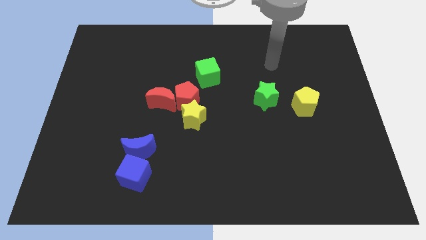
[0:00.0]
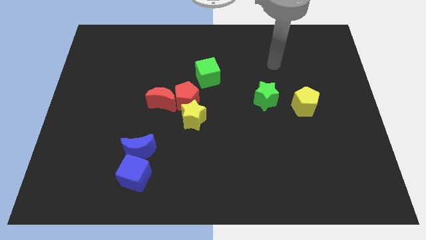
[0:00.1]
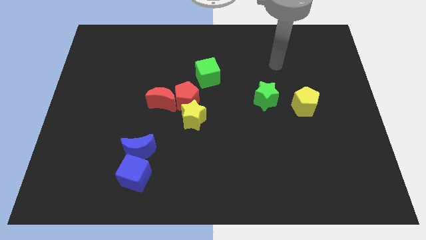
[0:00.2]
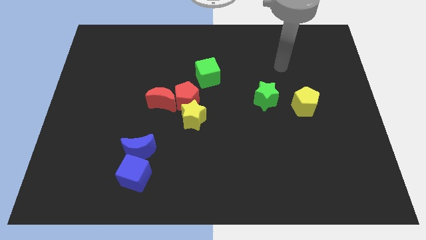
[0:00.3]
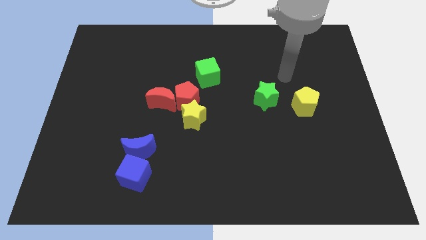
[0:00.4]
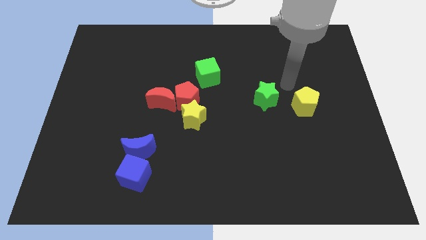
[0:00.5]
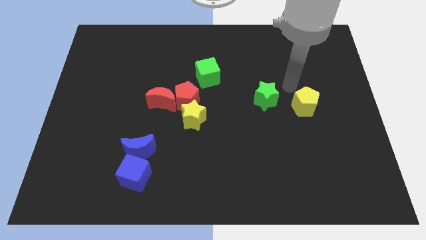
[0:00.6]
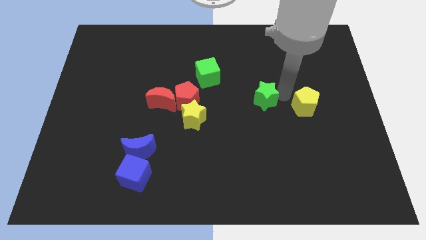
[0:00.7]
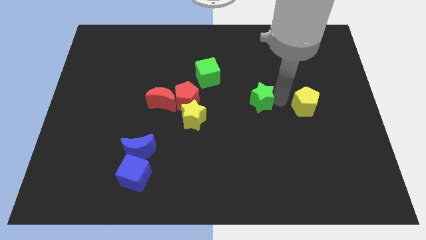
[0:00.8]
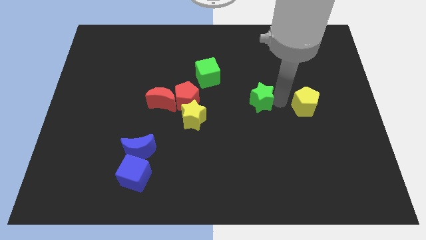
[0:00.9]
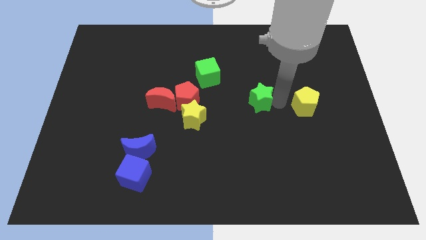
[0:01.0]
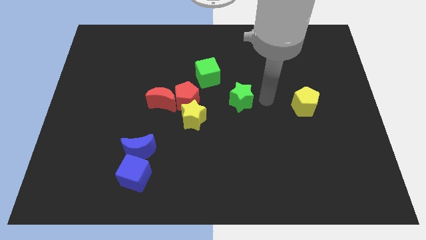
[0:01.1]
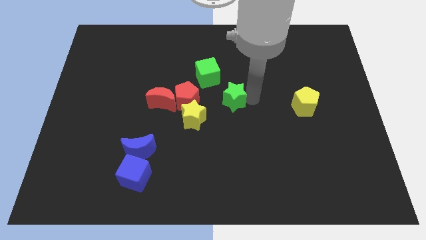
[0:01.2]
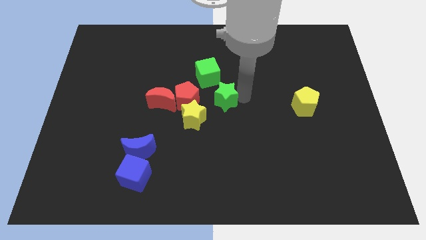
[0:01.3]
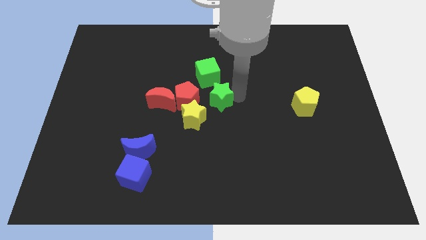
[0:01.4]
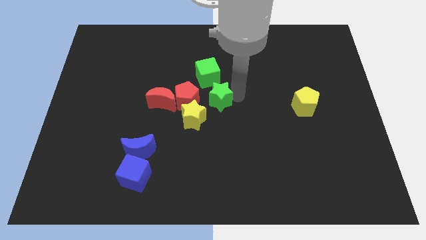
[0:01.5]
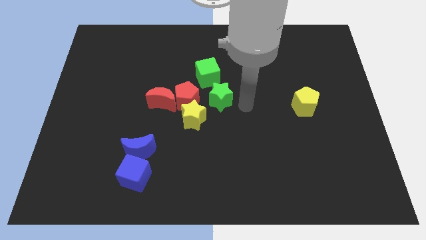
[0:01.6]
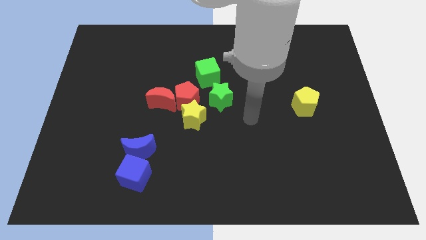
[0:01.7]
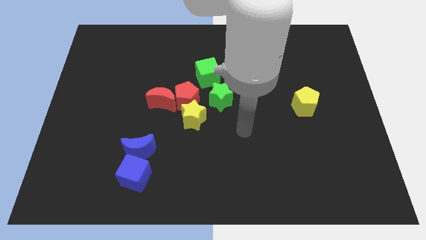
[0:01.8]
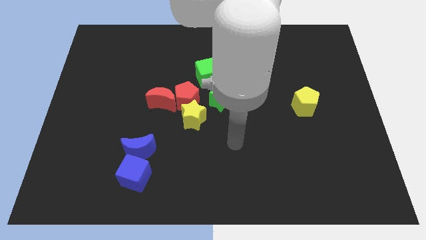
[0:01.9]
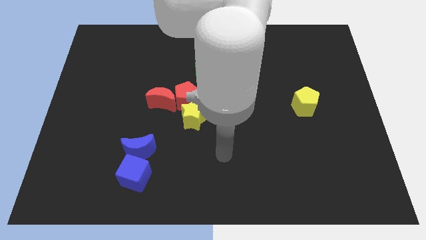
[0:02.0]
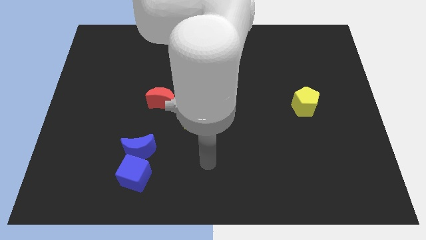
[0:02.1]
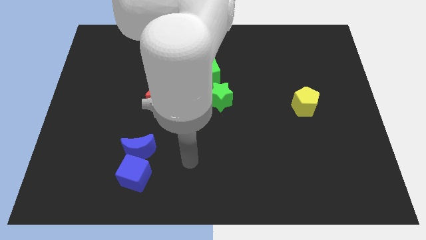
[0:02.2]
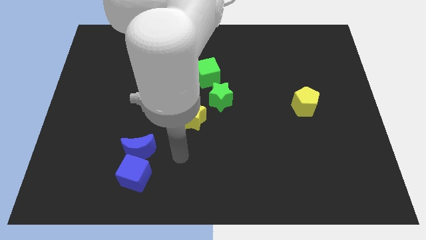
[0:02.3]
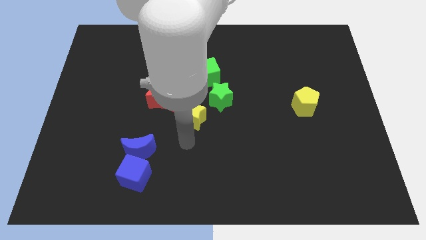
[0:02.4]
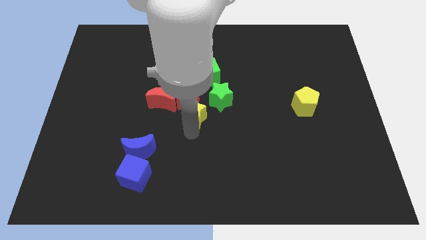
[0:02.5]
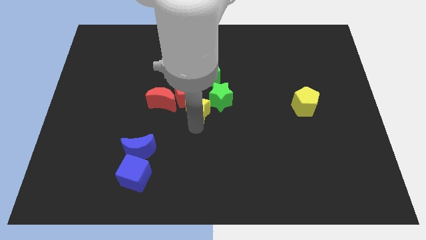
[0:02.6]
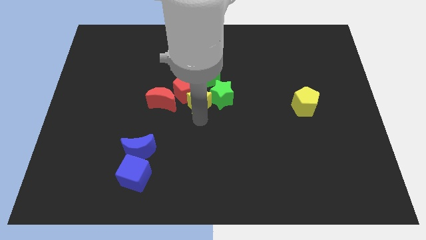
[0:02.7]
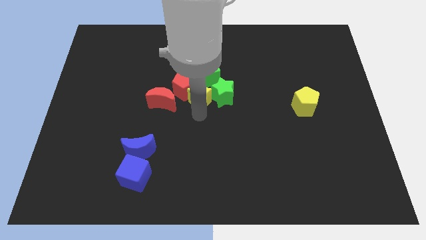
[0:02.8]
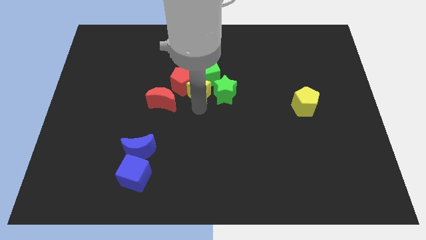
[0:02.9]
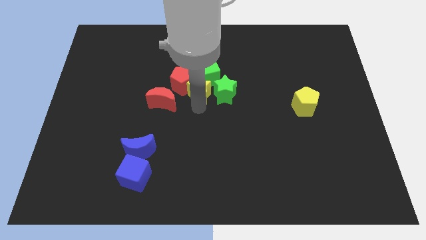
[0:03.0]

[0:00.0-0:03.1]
push the yellow star into the green cube

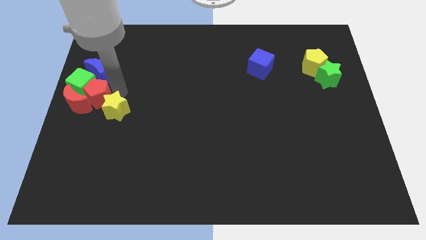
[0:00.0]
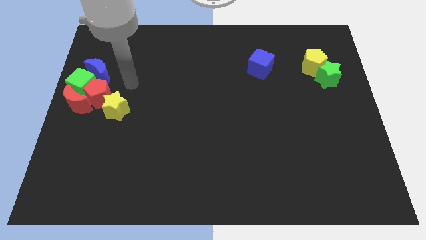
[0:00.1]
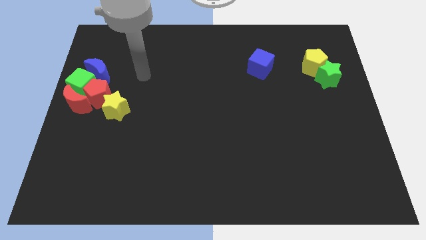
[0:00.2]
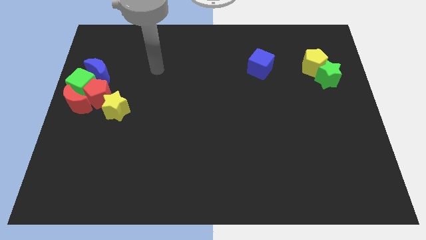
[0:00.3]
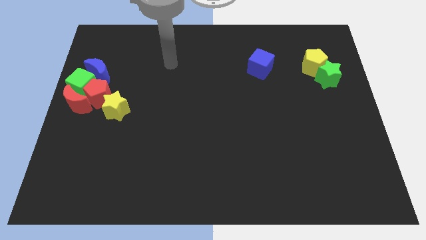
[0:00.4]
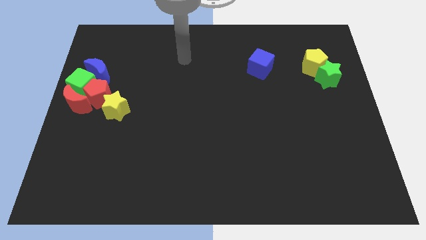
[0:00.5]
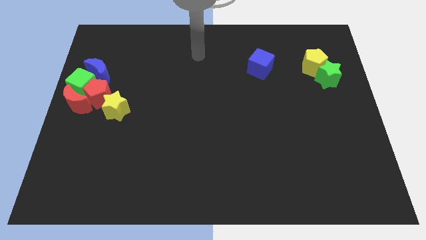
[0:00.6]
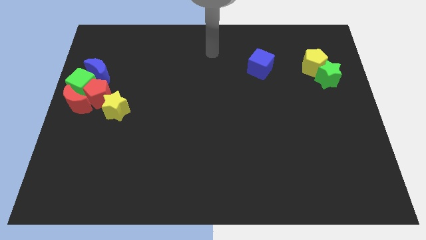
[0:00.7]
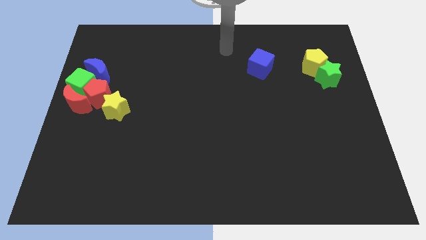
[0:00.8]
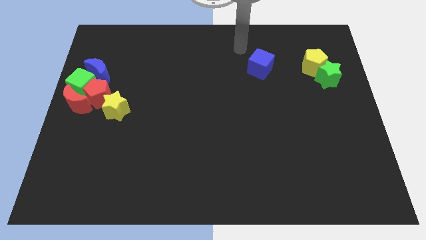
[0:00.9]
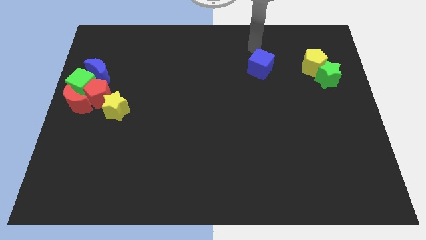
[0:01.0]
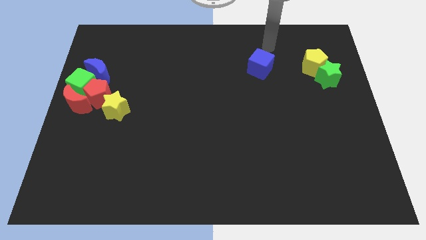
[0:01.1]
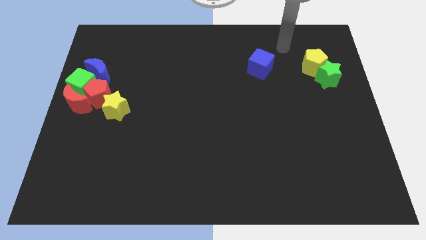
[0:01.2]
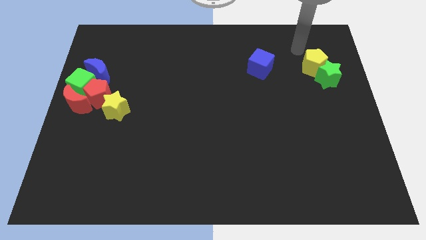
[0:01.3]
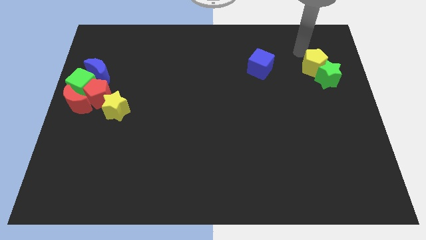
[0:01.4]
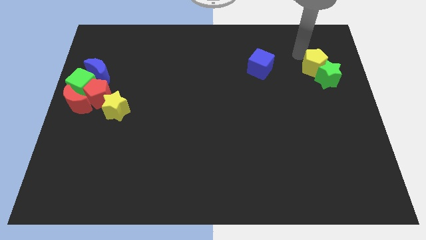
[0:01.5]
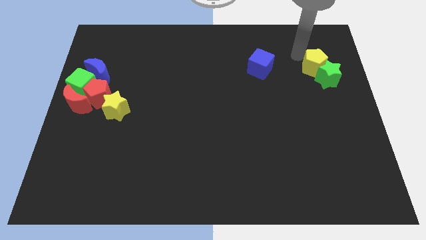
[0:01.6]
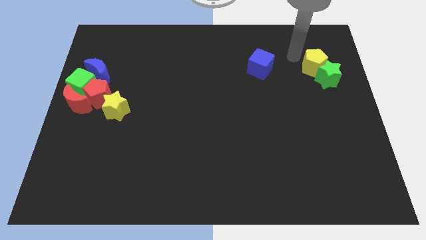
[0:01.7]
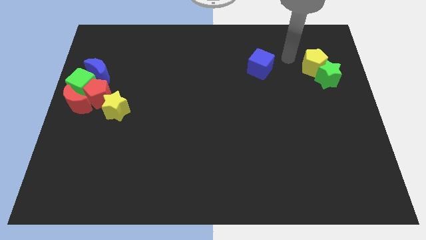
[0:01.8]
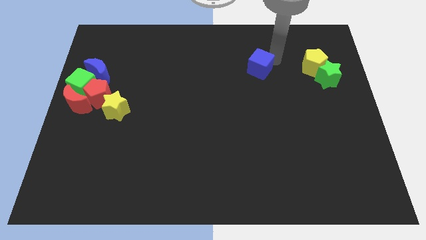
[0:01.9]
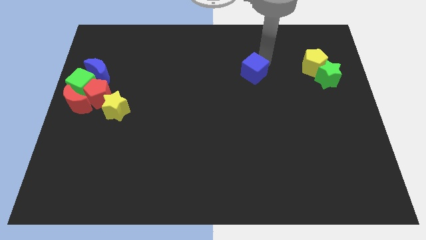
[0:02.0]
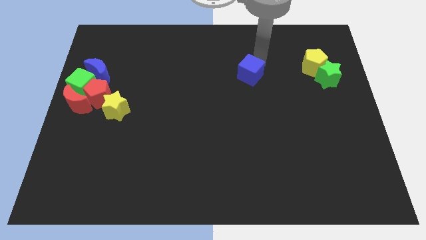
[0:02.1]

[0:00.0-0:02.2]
push the blue cube towards the center of the board

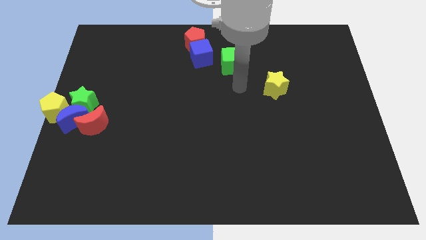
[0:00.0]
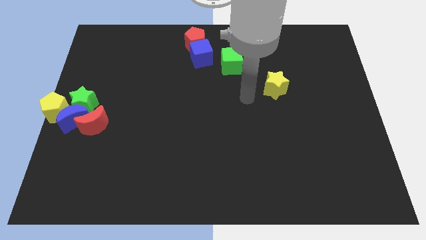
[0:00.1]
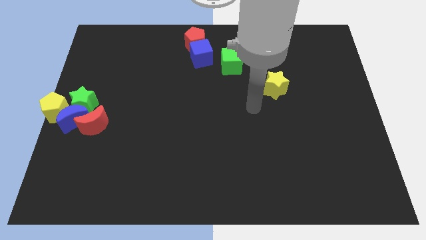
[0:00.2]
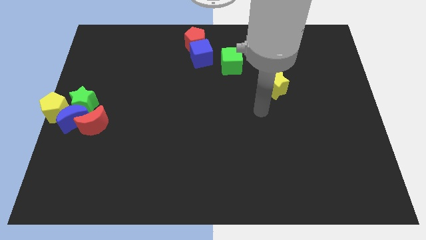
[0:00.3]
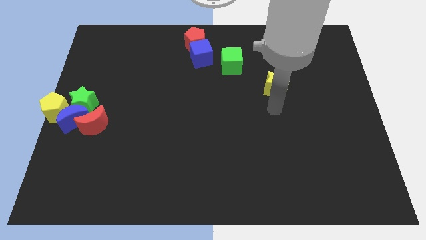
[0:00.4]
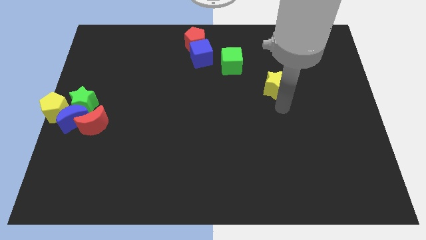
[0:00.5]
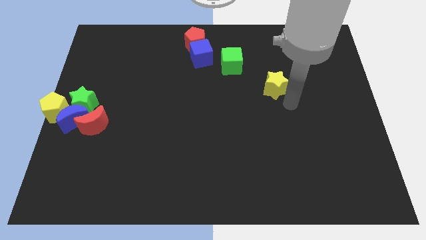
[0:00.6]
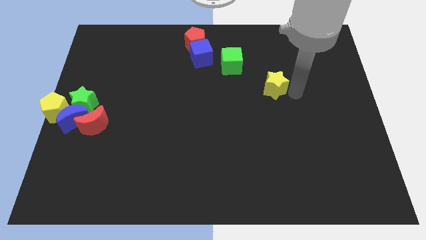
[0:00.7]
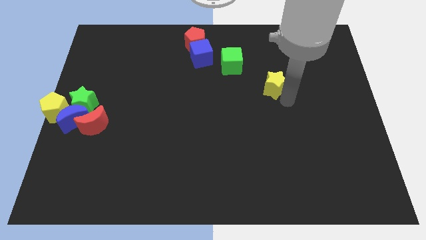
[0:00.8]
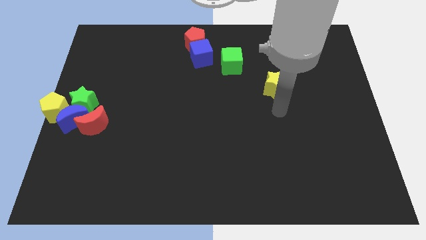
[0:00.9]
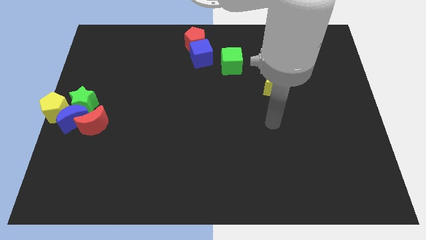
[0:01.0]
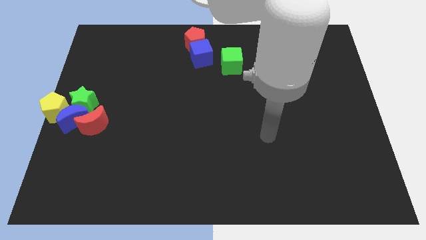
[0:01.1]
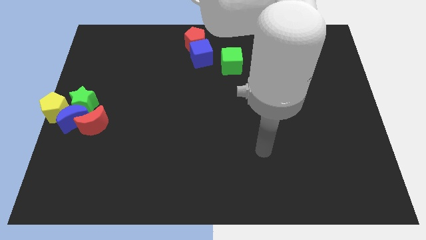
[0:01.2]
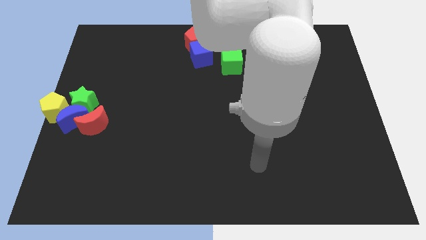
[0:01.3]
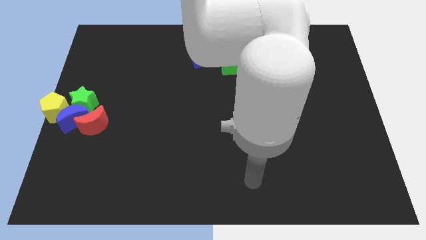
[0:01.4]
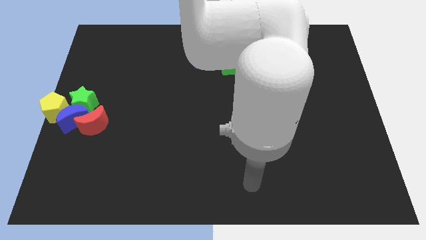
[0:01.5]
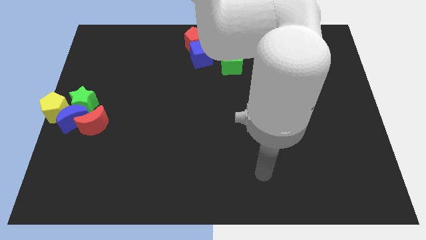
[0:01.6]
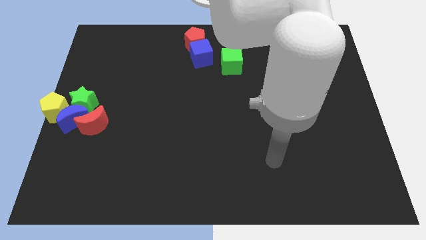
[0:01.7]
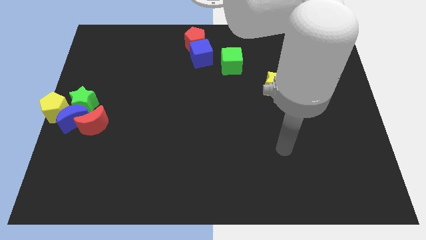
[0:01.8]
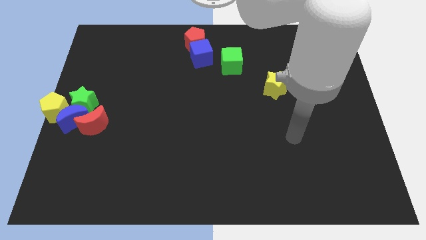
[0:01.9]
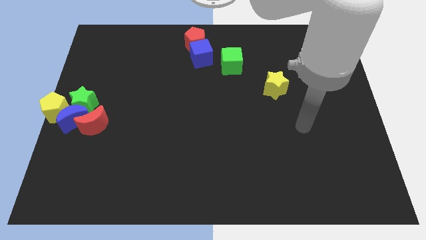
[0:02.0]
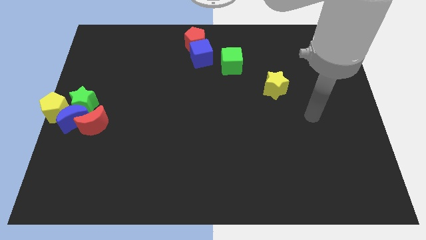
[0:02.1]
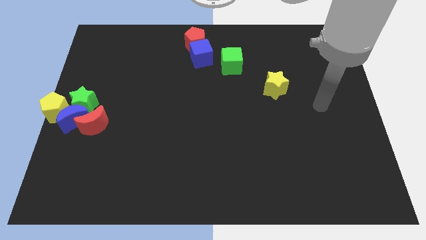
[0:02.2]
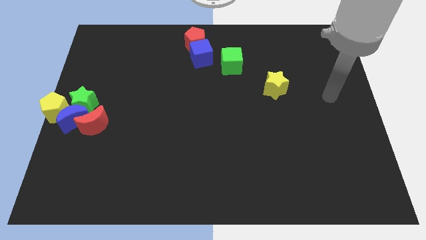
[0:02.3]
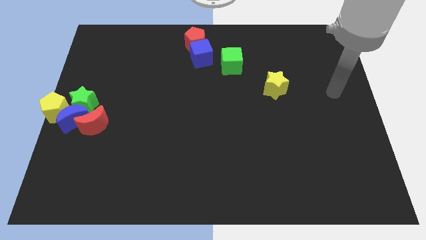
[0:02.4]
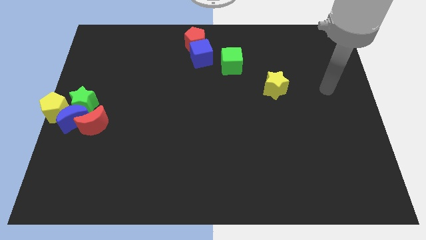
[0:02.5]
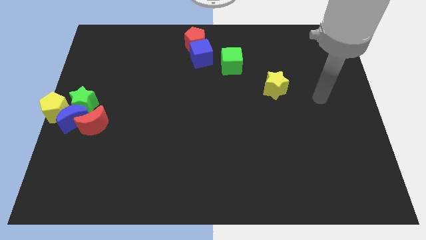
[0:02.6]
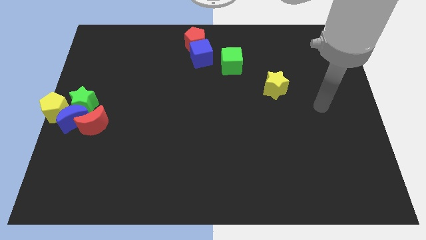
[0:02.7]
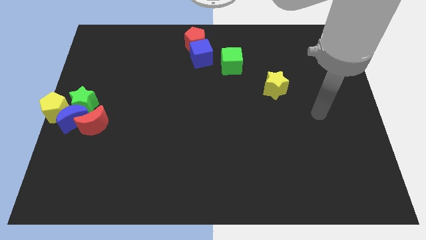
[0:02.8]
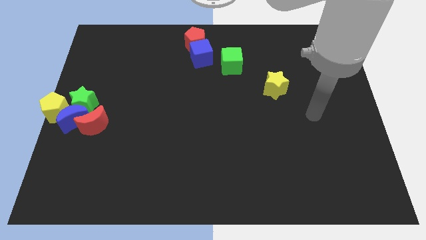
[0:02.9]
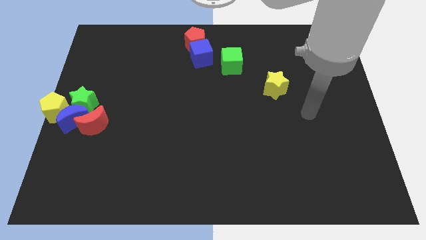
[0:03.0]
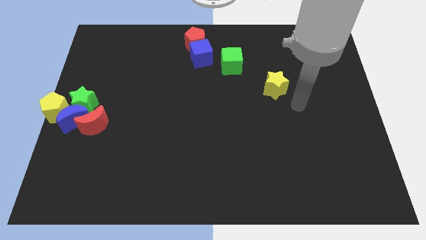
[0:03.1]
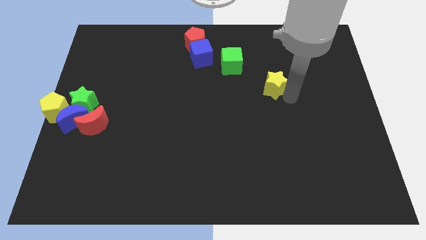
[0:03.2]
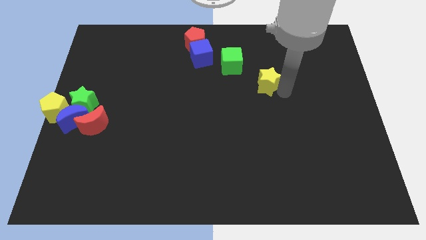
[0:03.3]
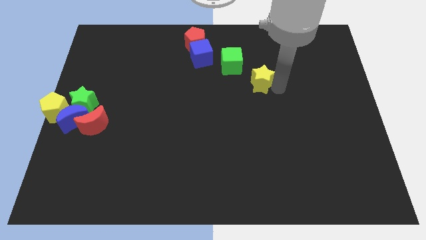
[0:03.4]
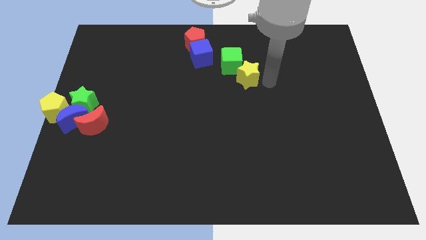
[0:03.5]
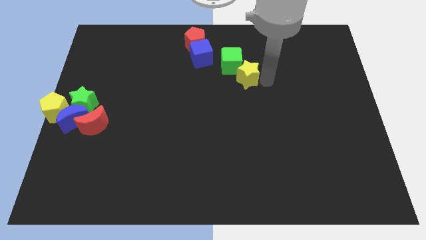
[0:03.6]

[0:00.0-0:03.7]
push the yellow star into the bottom right side of the green cube
